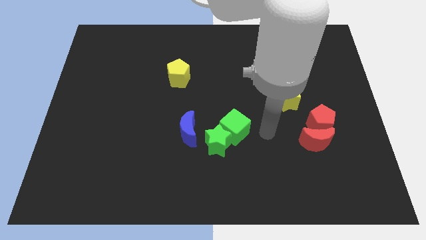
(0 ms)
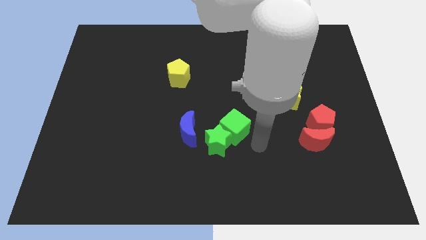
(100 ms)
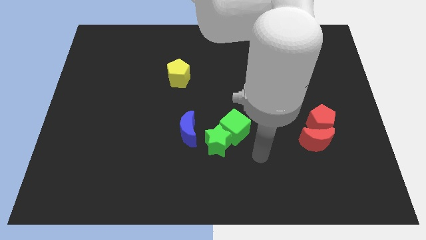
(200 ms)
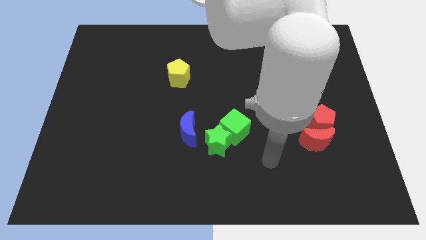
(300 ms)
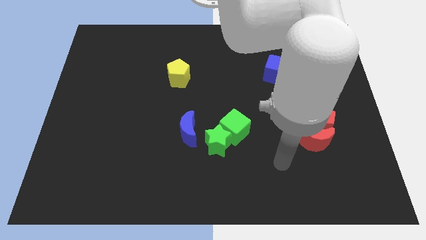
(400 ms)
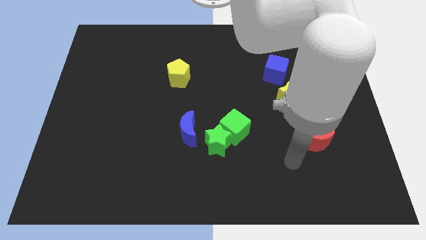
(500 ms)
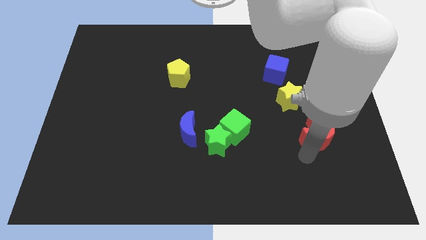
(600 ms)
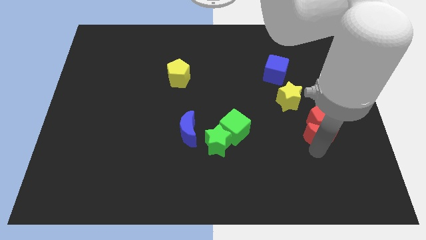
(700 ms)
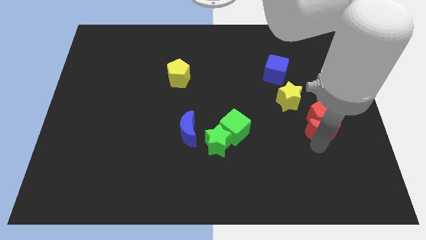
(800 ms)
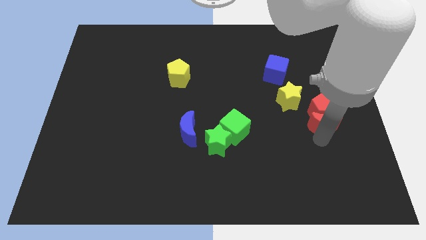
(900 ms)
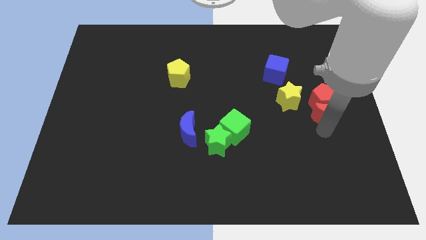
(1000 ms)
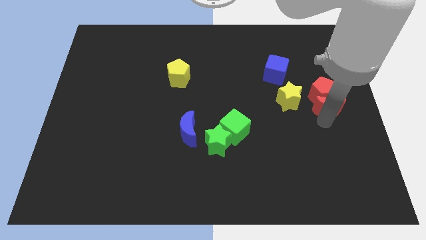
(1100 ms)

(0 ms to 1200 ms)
put both the red blocks at the right side of the yellow star

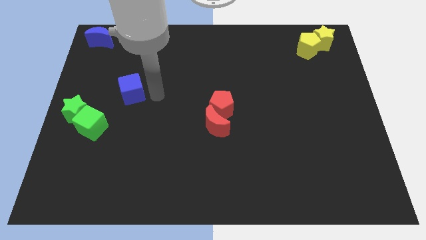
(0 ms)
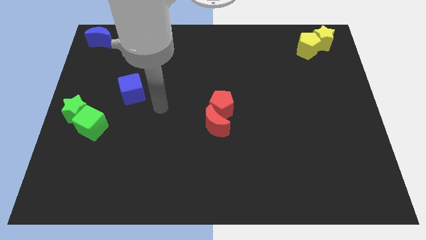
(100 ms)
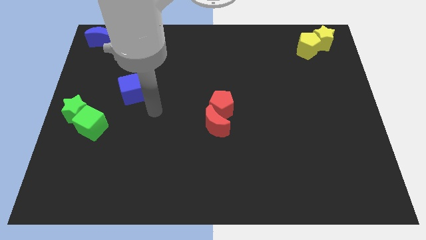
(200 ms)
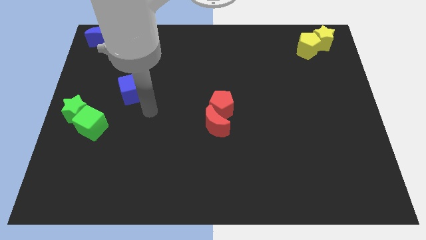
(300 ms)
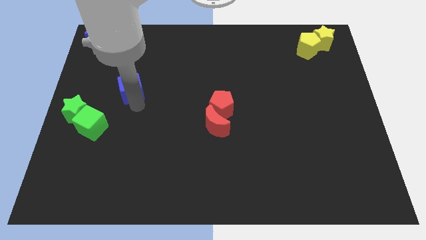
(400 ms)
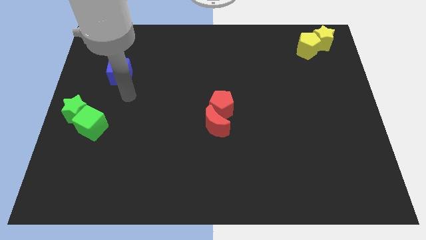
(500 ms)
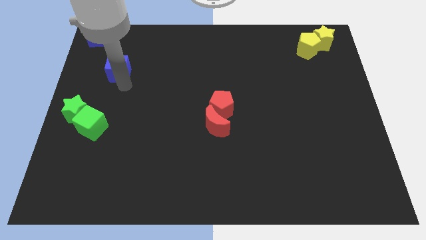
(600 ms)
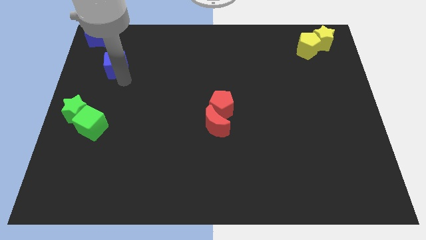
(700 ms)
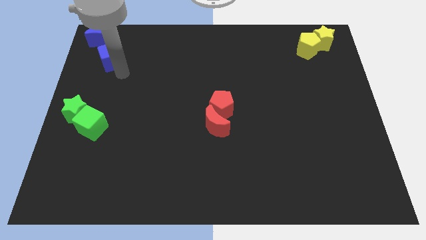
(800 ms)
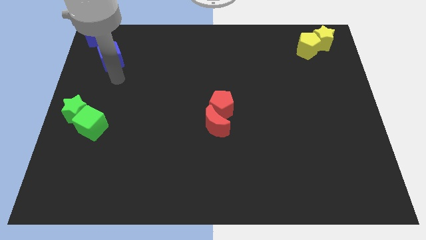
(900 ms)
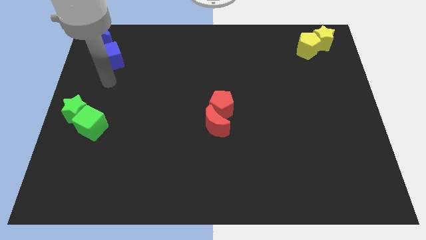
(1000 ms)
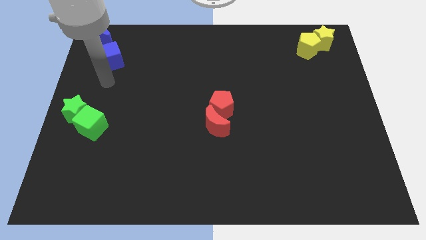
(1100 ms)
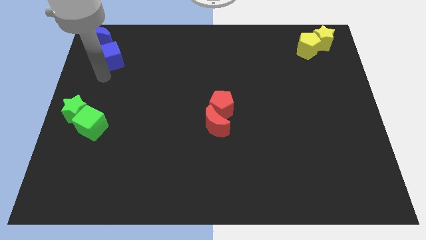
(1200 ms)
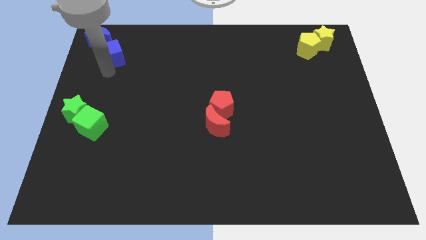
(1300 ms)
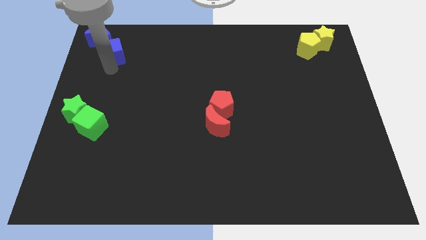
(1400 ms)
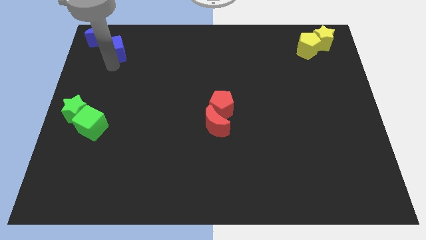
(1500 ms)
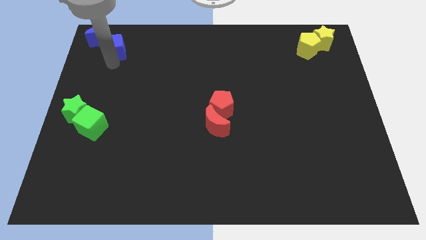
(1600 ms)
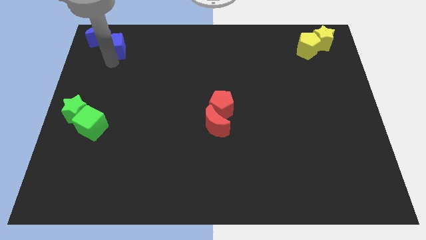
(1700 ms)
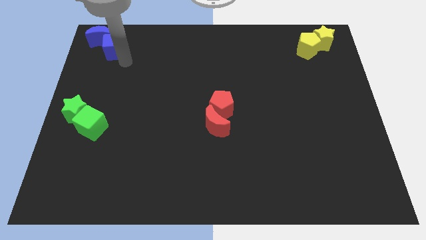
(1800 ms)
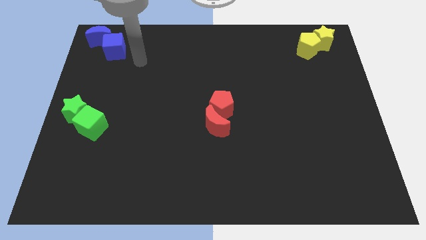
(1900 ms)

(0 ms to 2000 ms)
push the blue cube close to the blue crescent

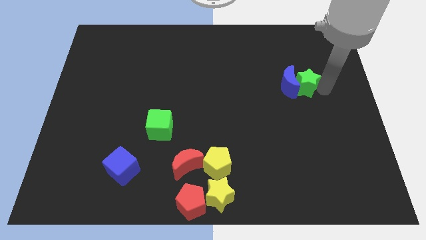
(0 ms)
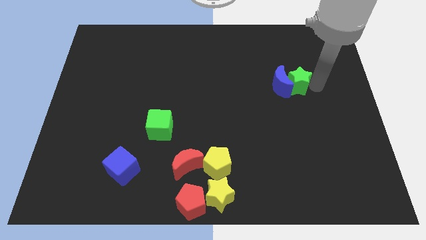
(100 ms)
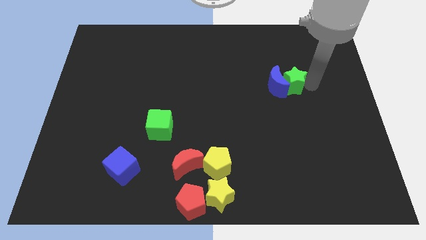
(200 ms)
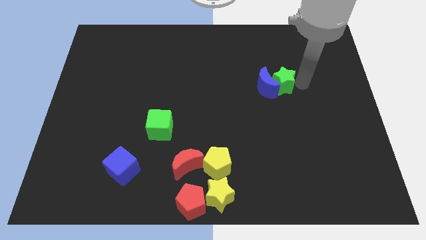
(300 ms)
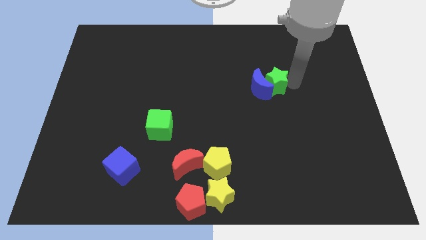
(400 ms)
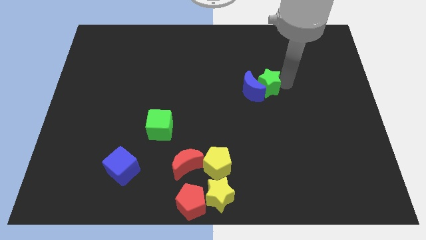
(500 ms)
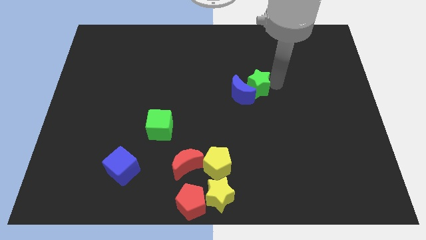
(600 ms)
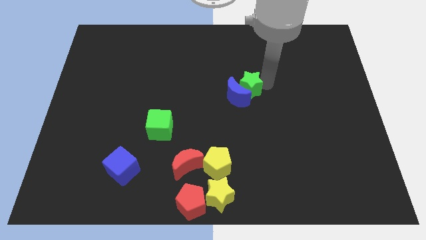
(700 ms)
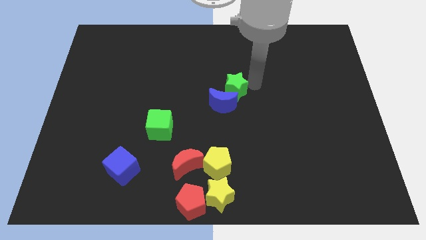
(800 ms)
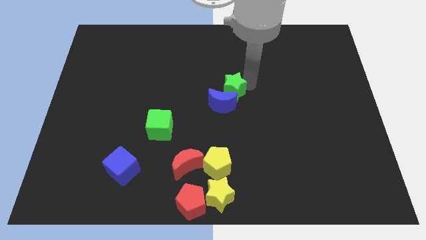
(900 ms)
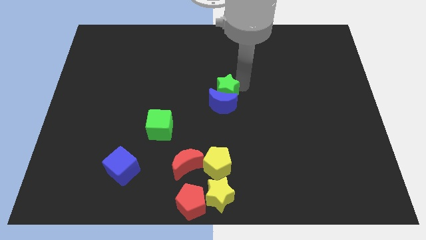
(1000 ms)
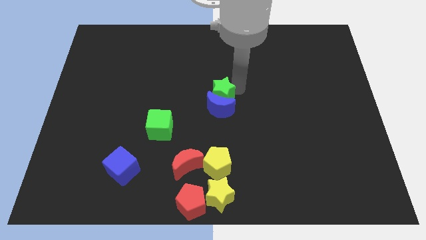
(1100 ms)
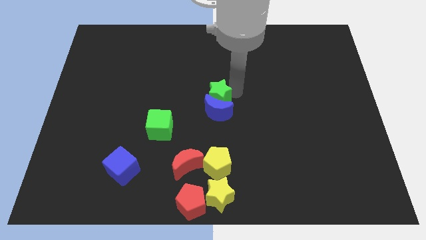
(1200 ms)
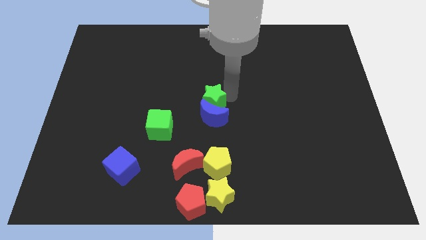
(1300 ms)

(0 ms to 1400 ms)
place the green star and blue moon to the center

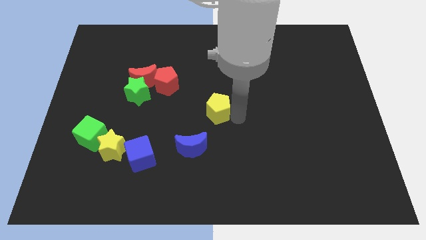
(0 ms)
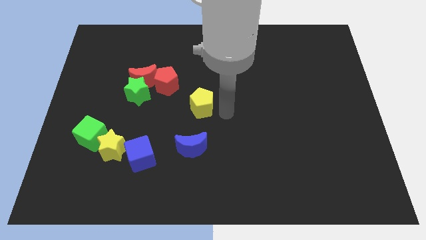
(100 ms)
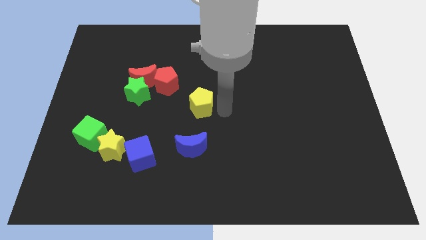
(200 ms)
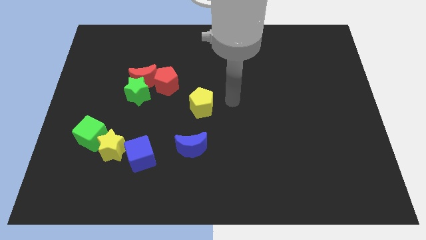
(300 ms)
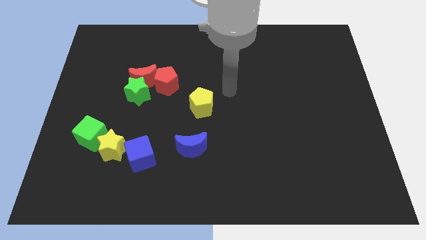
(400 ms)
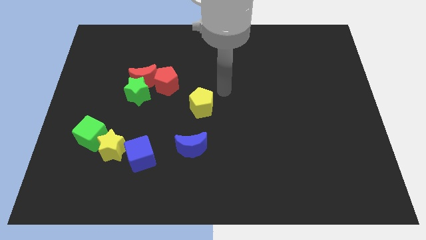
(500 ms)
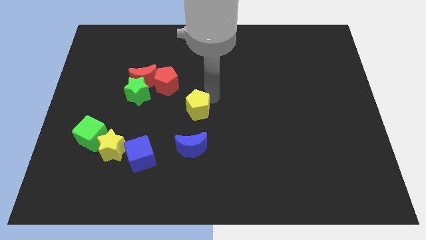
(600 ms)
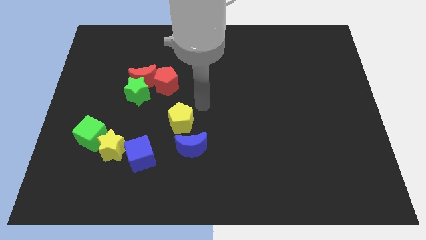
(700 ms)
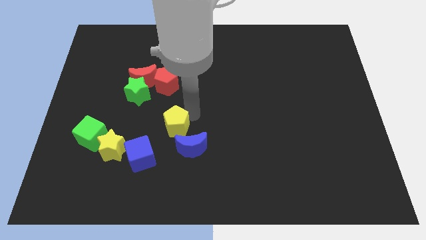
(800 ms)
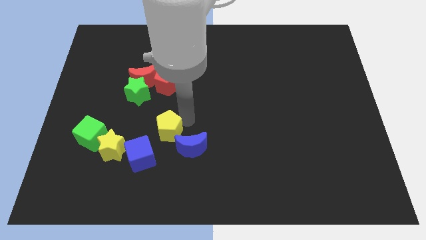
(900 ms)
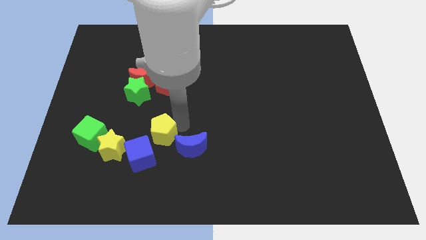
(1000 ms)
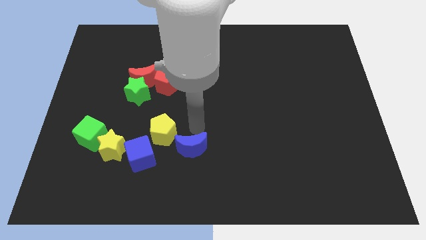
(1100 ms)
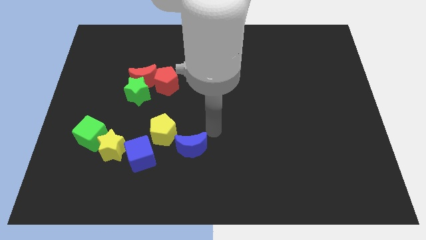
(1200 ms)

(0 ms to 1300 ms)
push the yellow pentagon close to the blue crescent

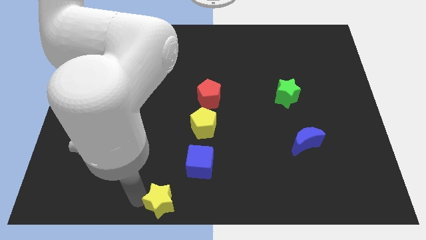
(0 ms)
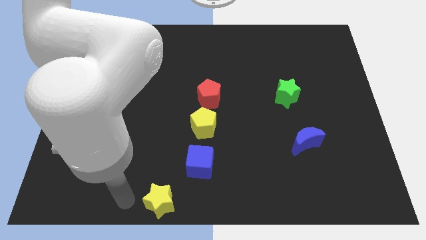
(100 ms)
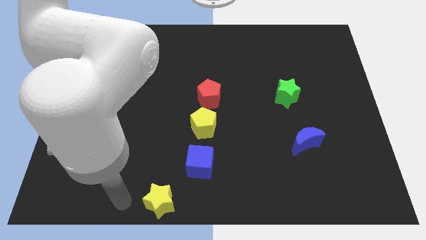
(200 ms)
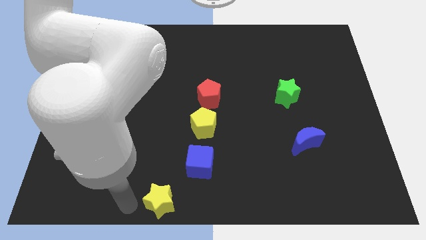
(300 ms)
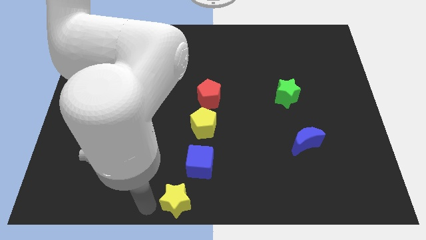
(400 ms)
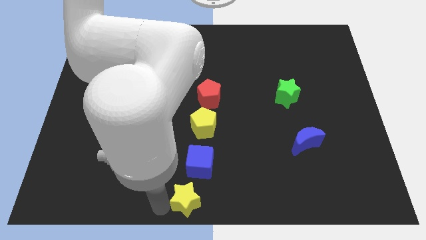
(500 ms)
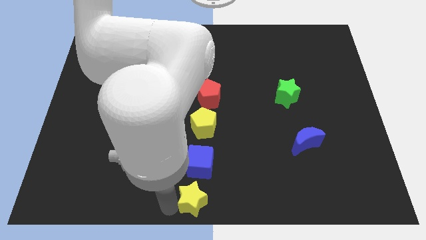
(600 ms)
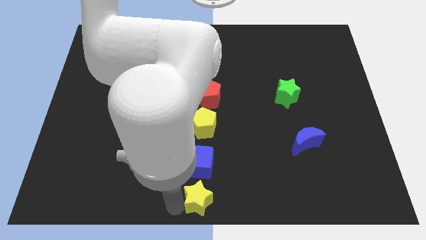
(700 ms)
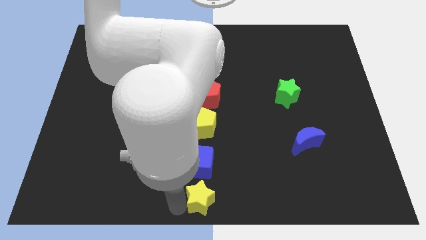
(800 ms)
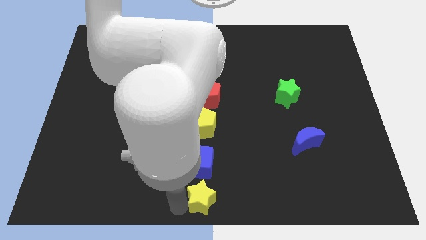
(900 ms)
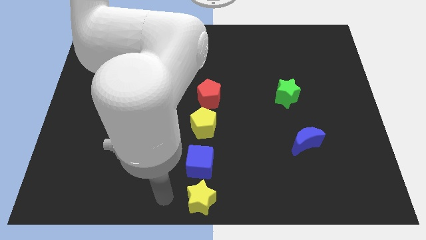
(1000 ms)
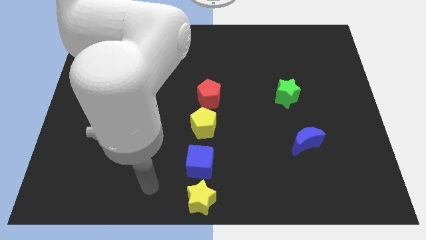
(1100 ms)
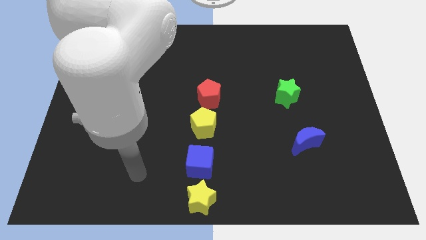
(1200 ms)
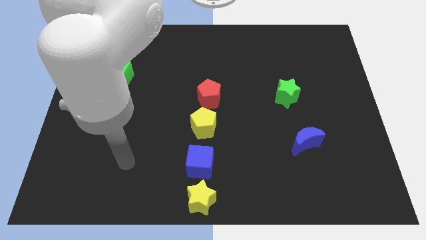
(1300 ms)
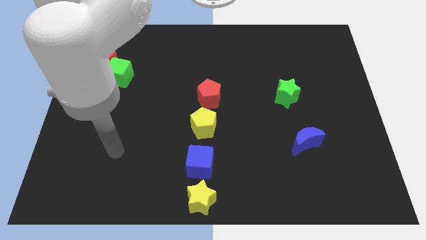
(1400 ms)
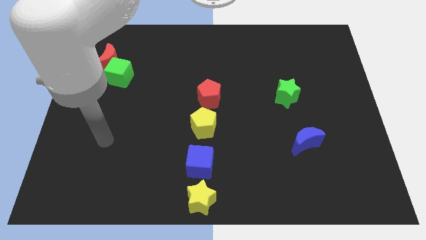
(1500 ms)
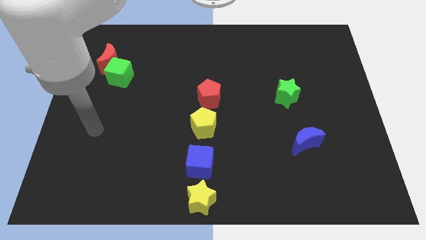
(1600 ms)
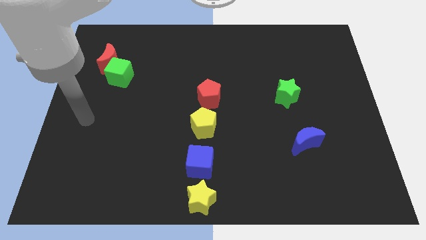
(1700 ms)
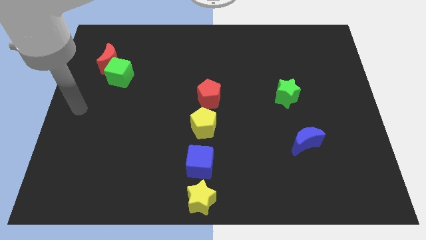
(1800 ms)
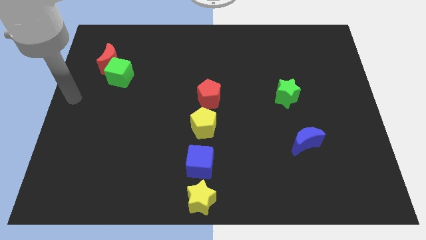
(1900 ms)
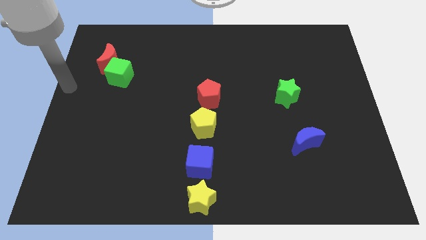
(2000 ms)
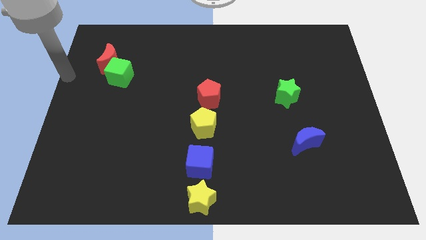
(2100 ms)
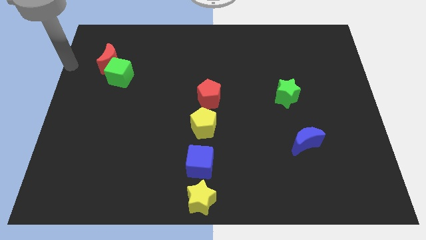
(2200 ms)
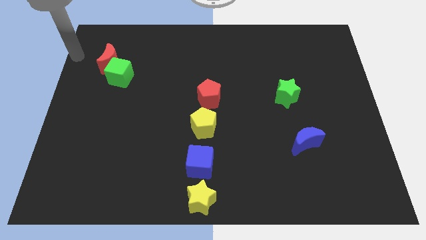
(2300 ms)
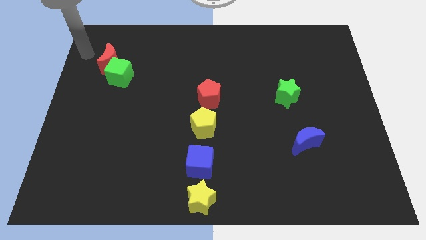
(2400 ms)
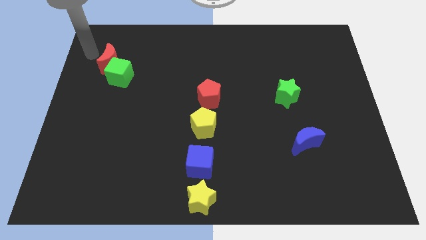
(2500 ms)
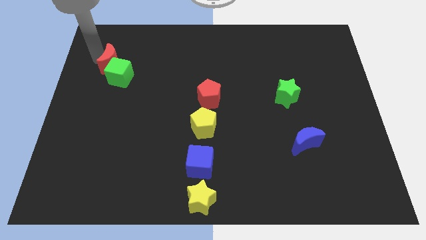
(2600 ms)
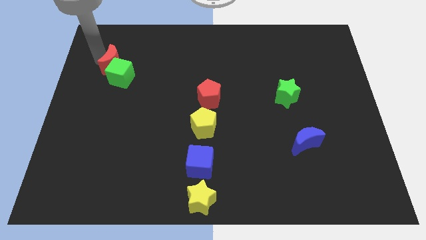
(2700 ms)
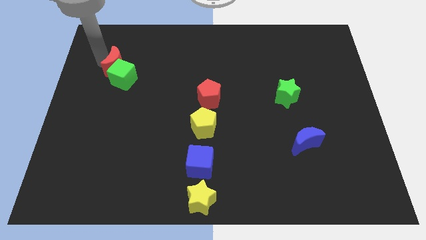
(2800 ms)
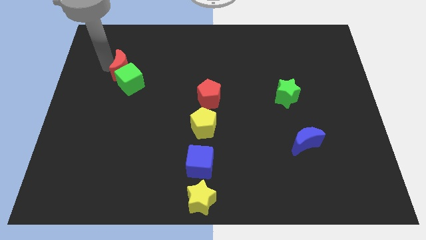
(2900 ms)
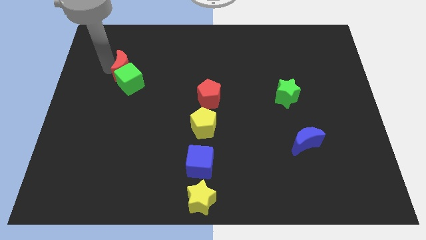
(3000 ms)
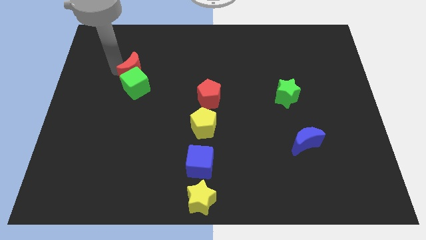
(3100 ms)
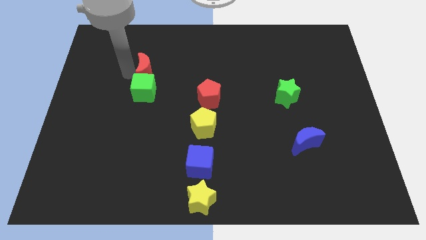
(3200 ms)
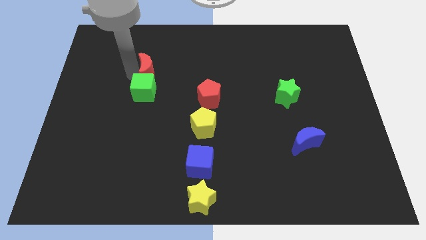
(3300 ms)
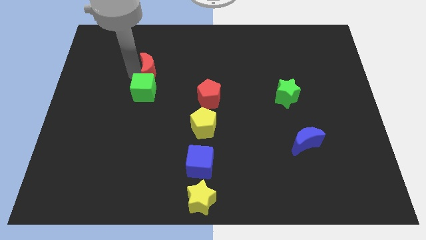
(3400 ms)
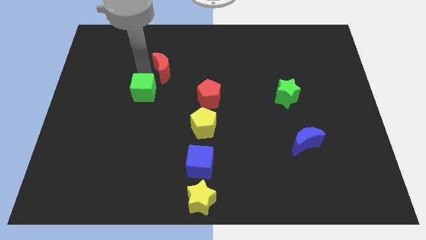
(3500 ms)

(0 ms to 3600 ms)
slide both the red moon and the green block together towards the center
